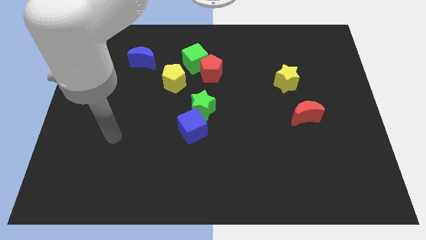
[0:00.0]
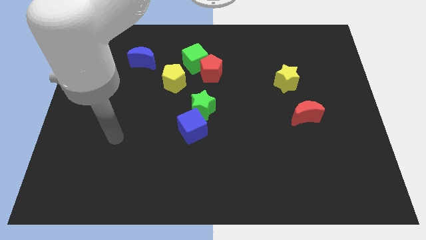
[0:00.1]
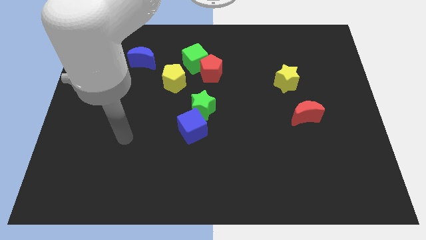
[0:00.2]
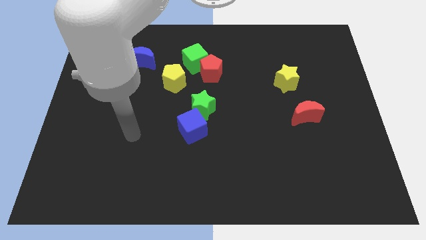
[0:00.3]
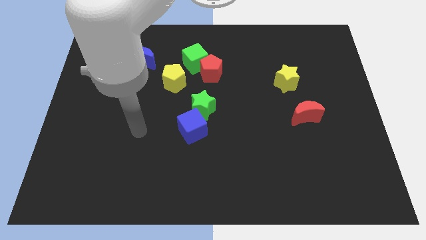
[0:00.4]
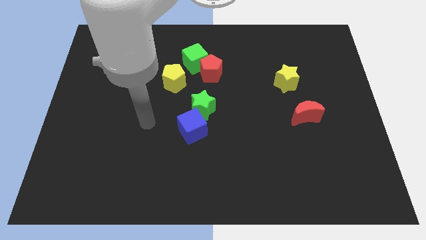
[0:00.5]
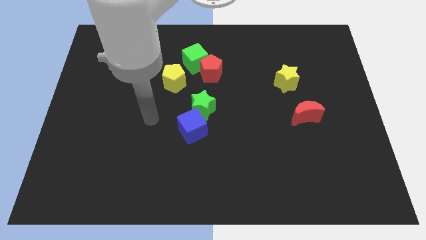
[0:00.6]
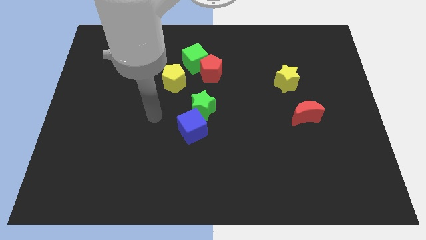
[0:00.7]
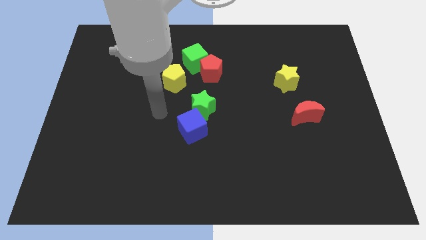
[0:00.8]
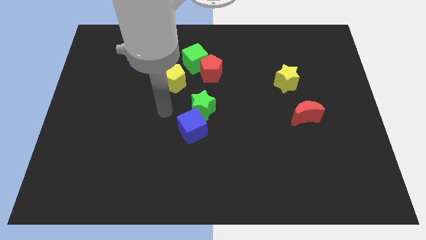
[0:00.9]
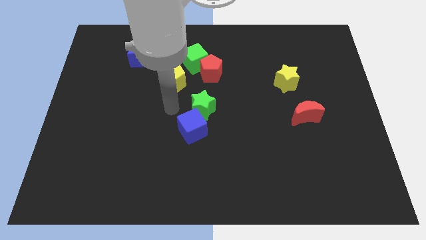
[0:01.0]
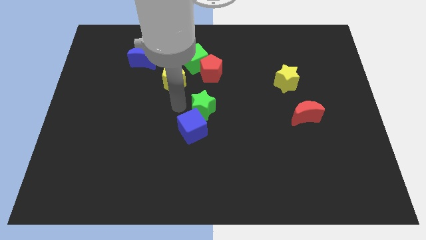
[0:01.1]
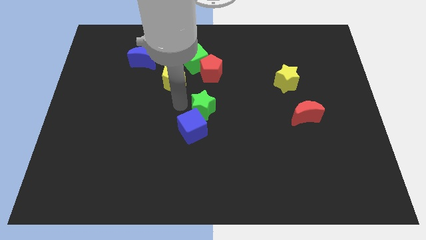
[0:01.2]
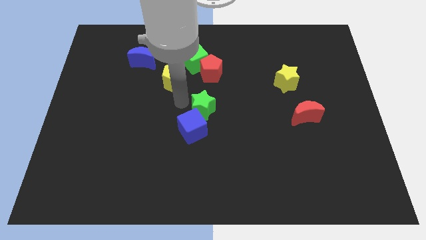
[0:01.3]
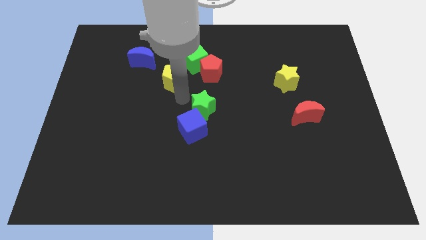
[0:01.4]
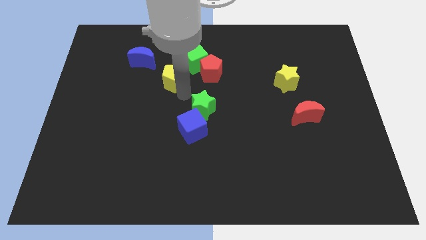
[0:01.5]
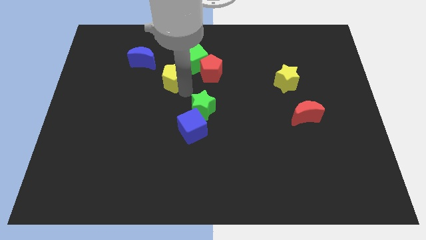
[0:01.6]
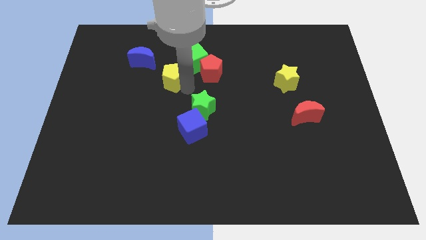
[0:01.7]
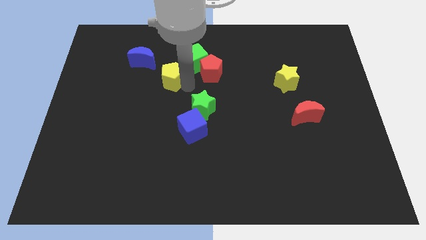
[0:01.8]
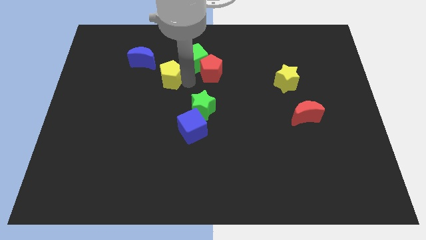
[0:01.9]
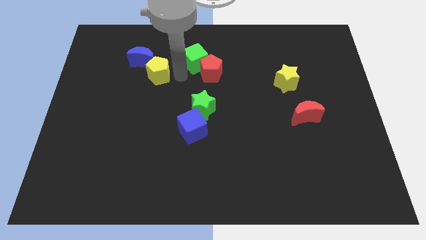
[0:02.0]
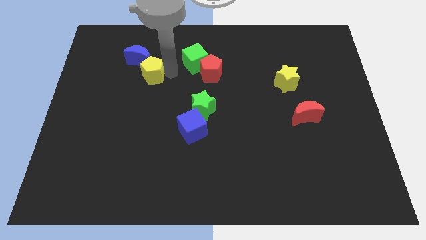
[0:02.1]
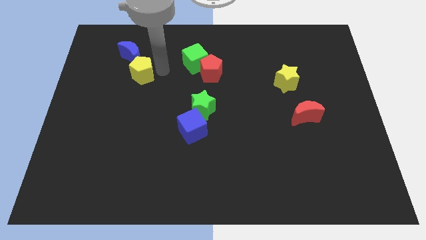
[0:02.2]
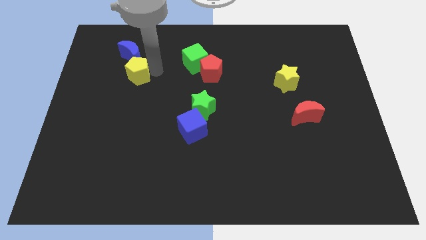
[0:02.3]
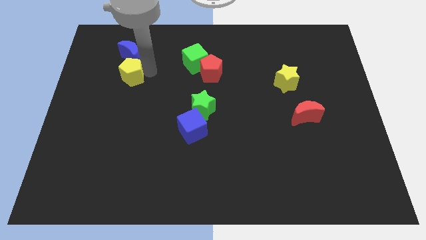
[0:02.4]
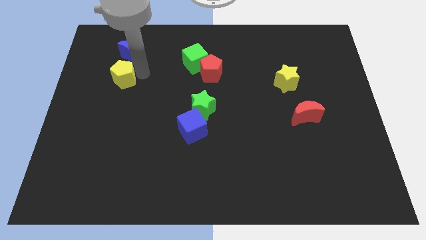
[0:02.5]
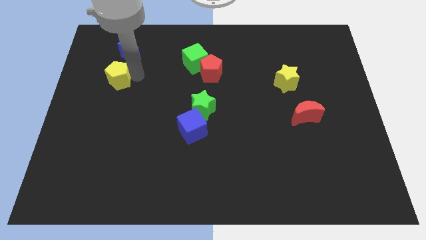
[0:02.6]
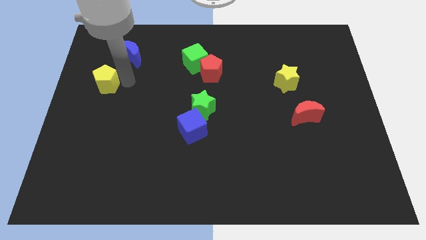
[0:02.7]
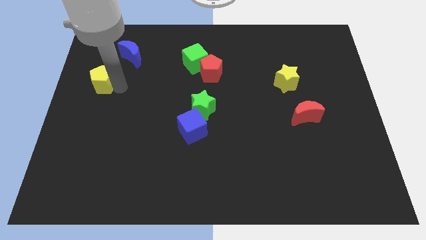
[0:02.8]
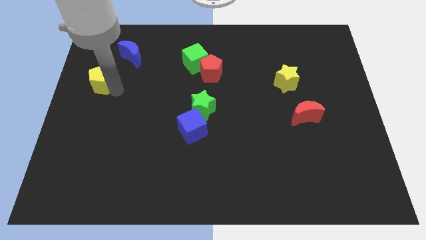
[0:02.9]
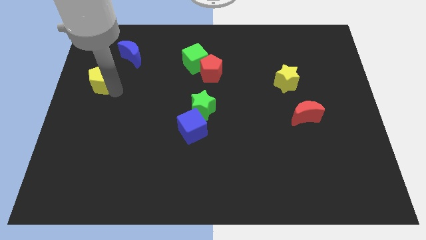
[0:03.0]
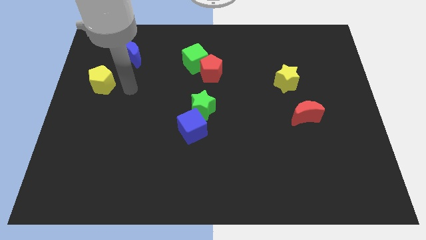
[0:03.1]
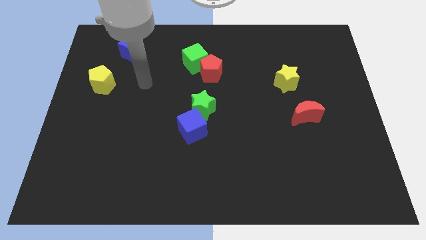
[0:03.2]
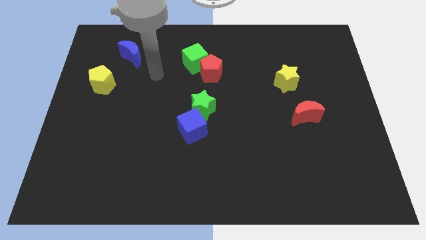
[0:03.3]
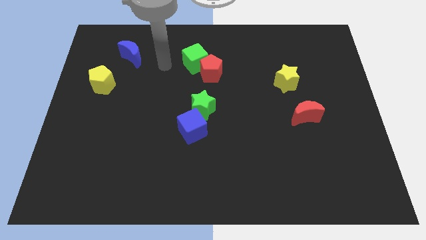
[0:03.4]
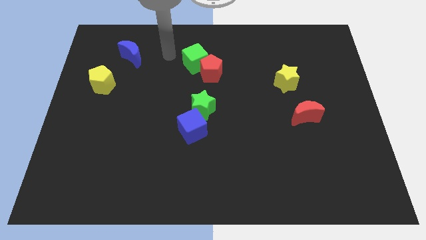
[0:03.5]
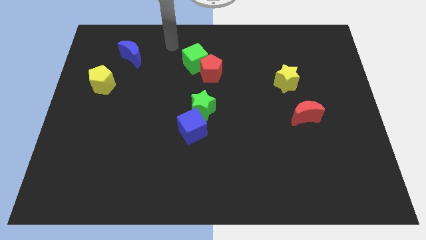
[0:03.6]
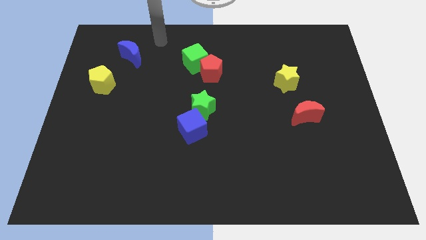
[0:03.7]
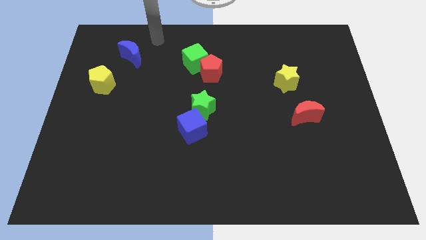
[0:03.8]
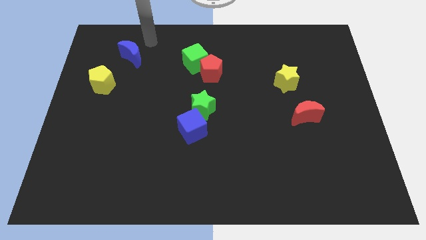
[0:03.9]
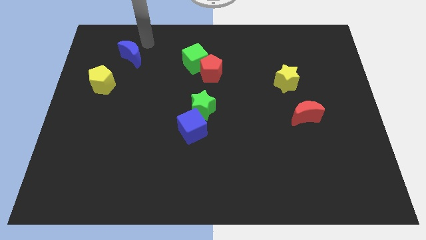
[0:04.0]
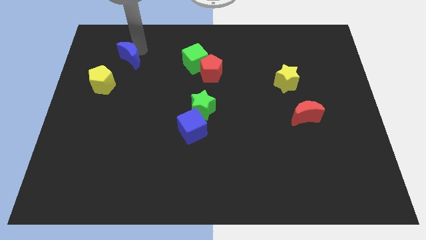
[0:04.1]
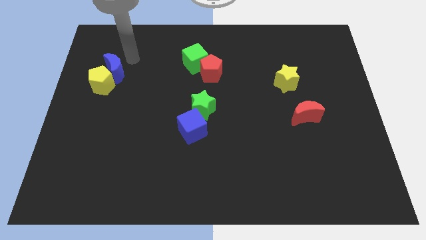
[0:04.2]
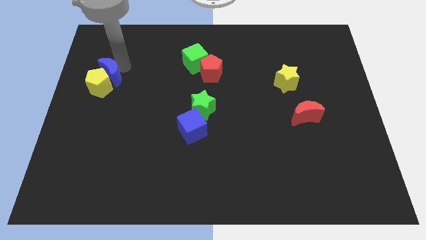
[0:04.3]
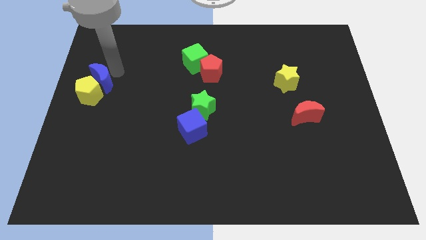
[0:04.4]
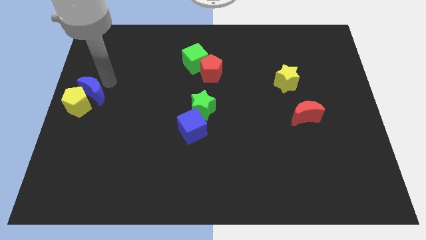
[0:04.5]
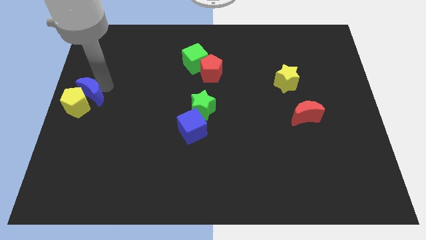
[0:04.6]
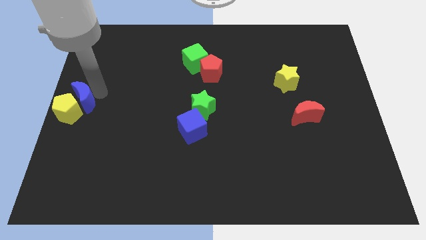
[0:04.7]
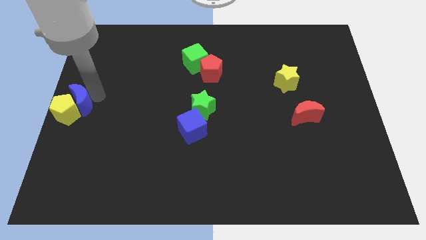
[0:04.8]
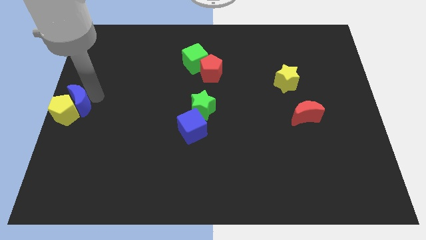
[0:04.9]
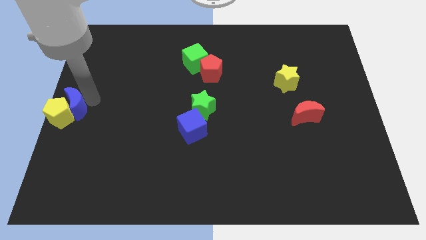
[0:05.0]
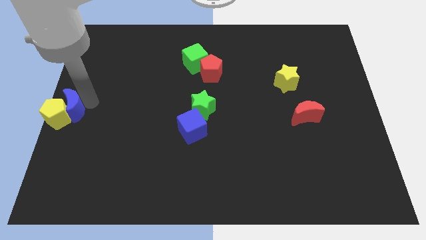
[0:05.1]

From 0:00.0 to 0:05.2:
move the yellow pentagon and blue crescent to the left center

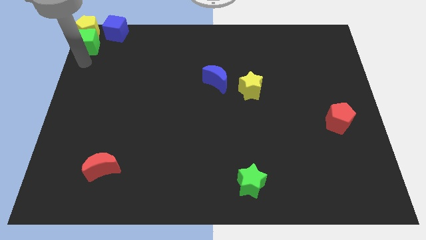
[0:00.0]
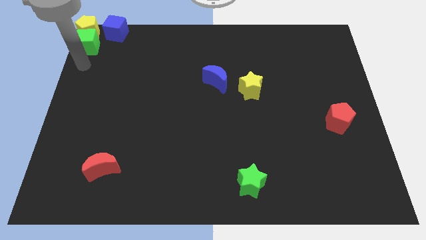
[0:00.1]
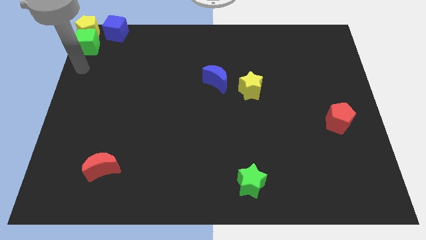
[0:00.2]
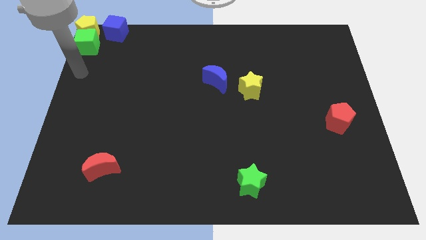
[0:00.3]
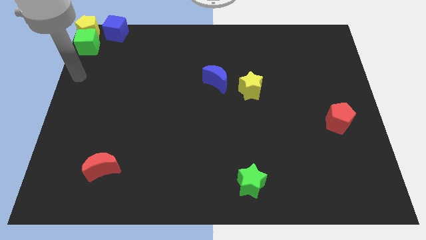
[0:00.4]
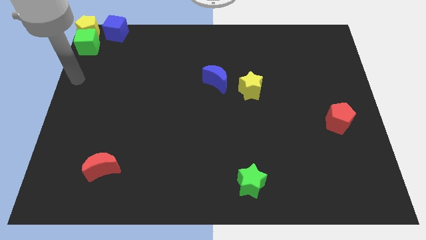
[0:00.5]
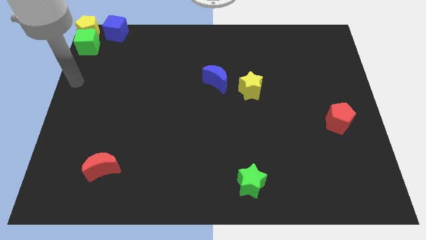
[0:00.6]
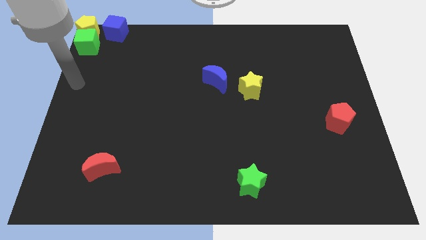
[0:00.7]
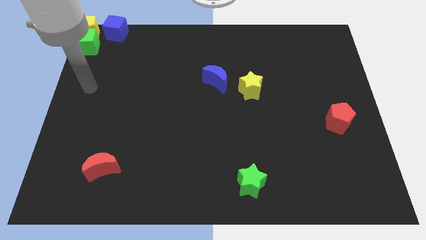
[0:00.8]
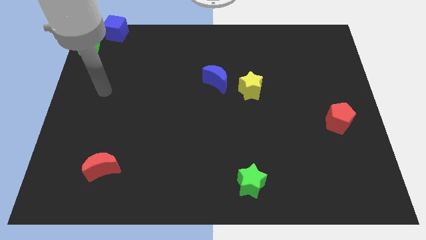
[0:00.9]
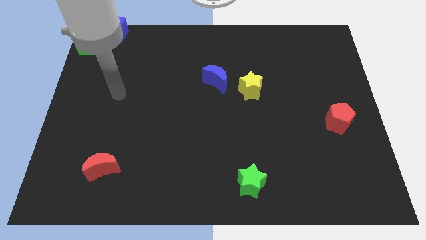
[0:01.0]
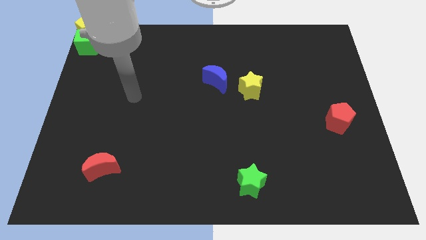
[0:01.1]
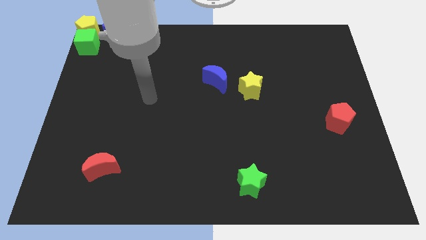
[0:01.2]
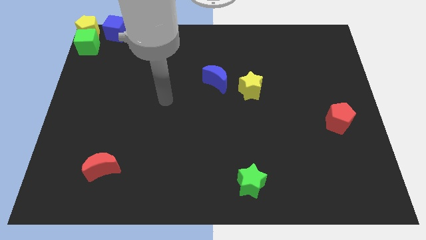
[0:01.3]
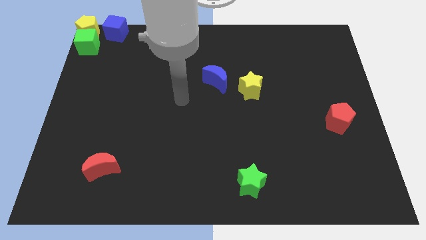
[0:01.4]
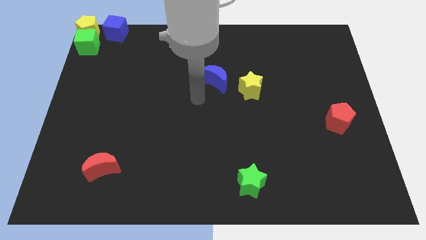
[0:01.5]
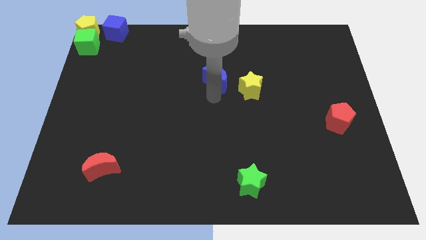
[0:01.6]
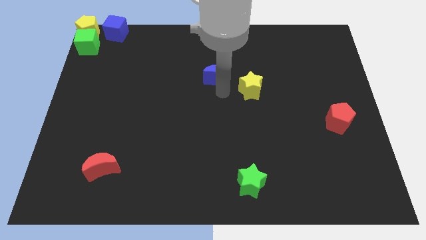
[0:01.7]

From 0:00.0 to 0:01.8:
touch at the bottom side of the blue cube

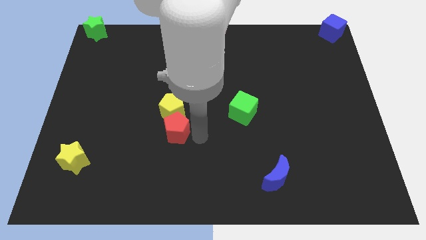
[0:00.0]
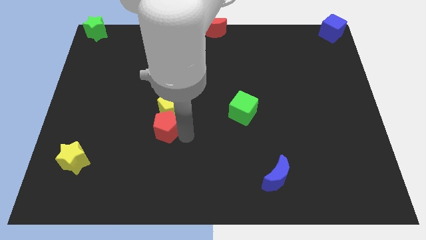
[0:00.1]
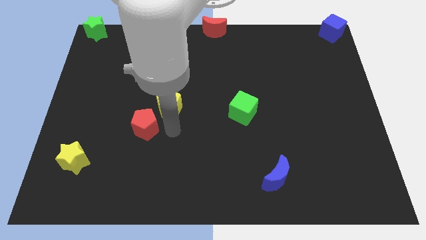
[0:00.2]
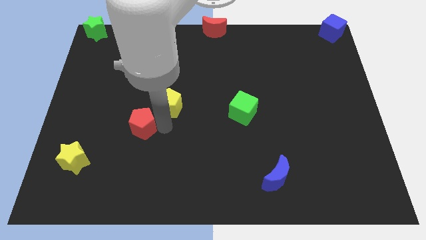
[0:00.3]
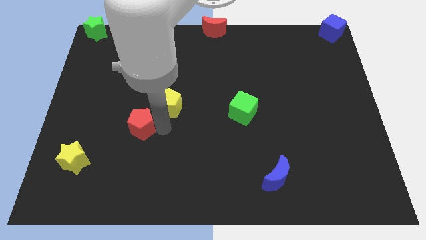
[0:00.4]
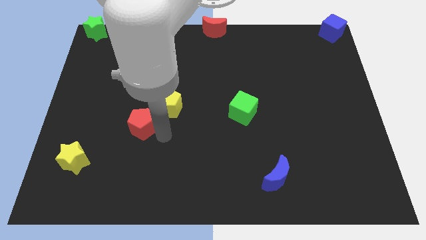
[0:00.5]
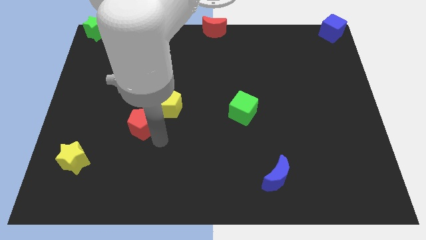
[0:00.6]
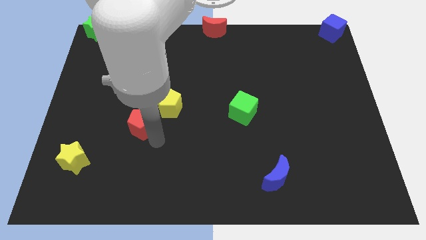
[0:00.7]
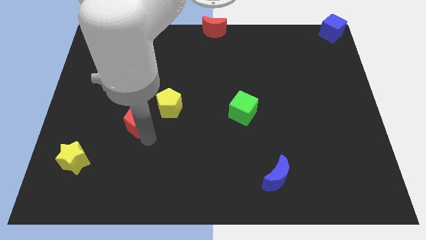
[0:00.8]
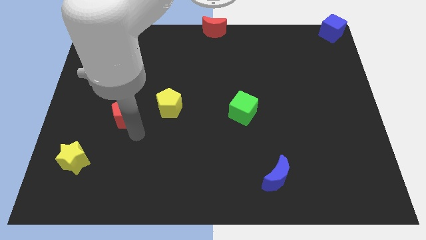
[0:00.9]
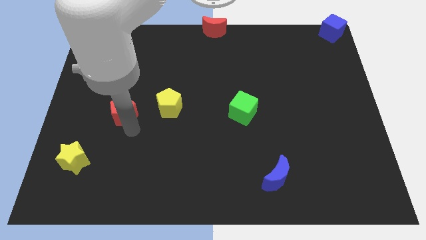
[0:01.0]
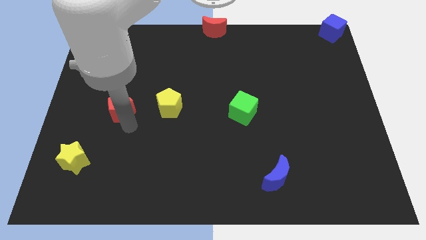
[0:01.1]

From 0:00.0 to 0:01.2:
separate the red pentagon from the yellow pentagon

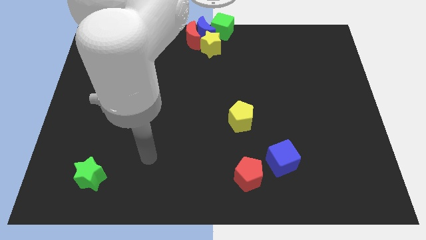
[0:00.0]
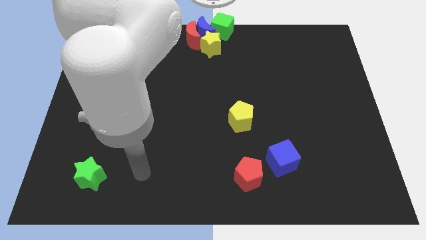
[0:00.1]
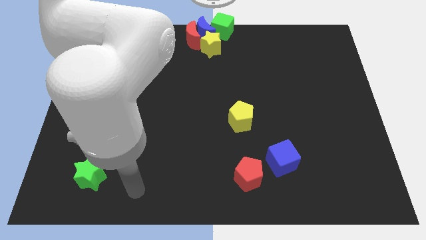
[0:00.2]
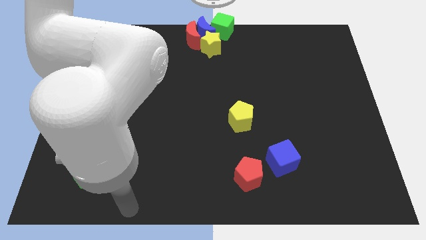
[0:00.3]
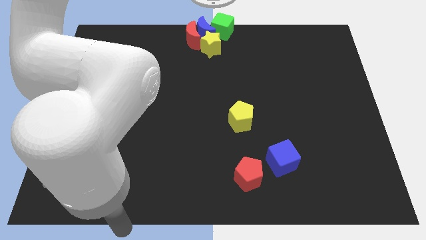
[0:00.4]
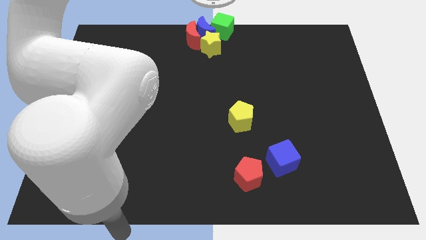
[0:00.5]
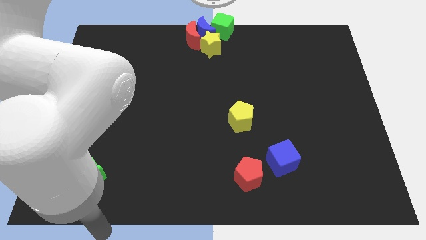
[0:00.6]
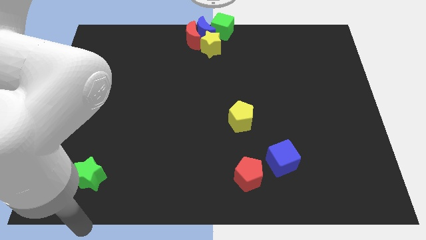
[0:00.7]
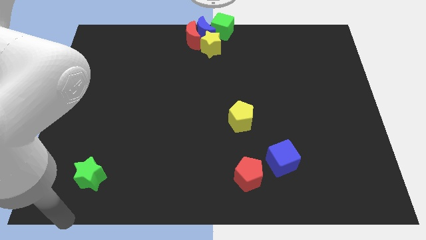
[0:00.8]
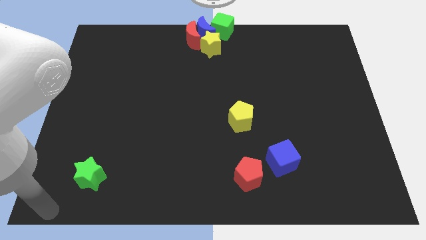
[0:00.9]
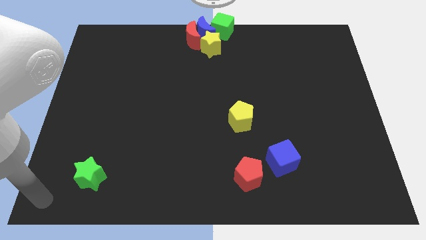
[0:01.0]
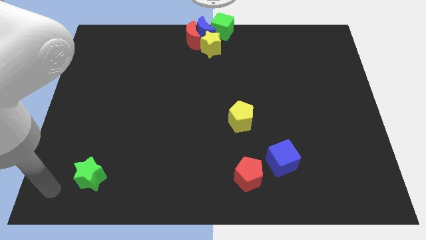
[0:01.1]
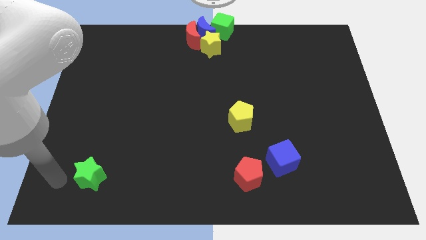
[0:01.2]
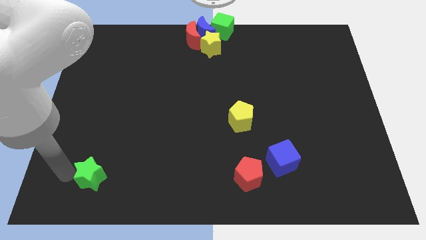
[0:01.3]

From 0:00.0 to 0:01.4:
move the arm towards the left the green star
